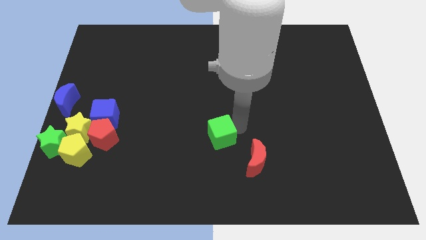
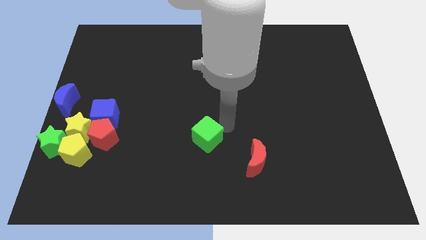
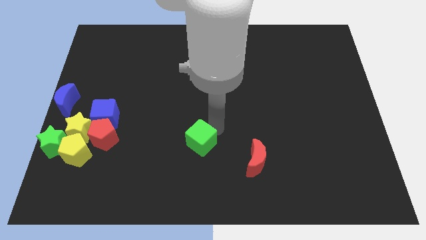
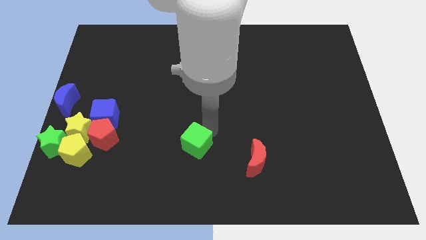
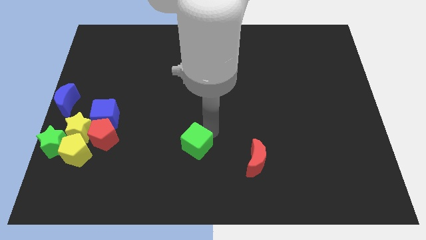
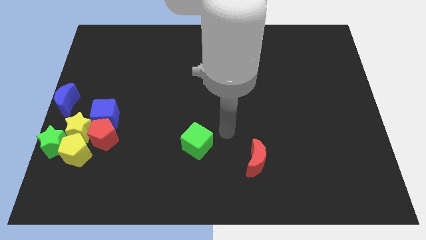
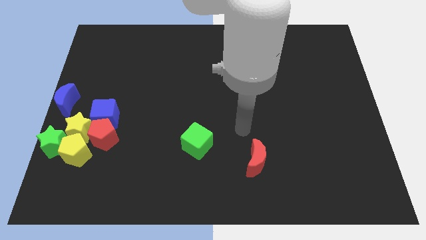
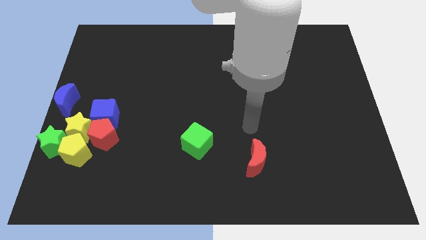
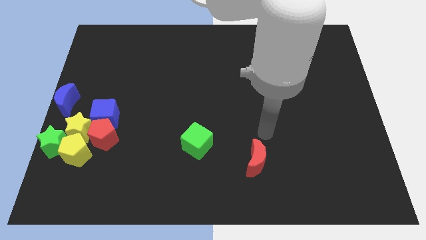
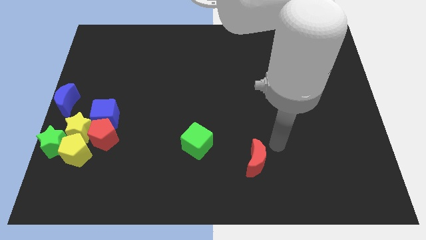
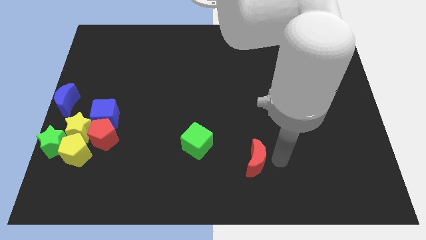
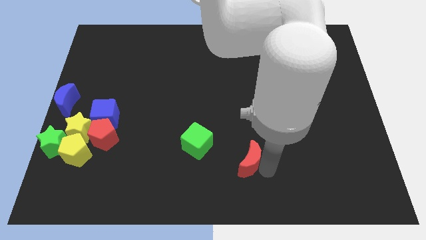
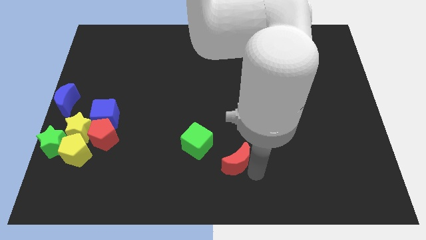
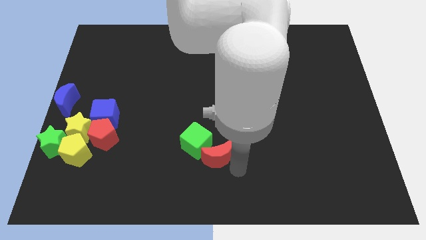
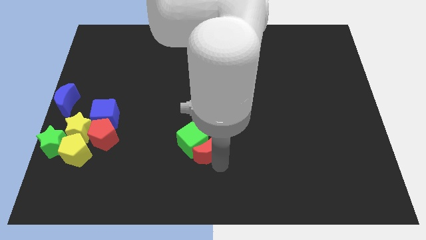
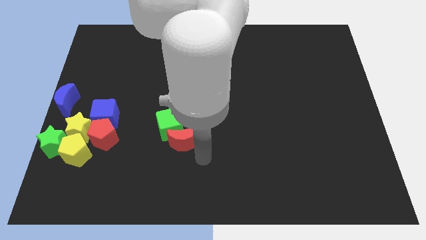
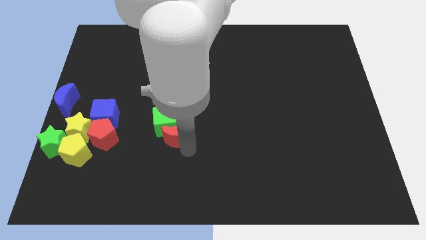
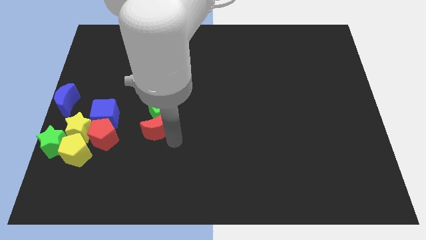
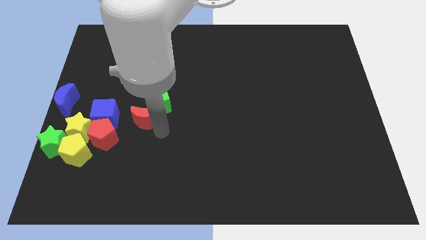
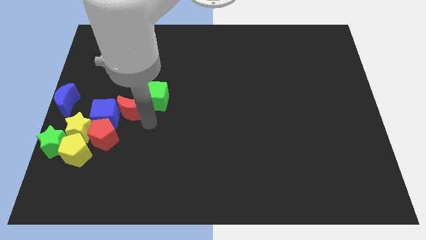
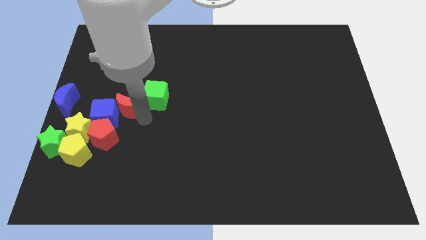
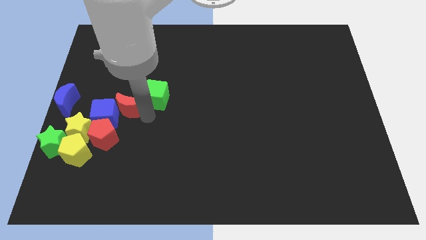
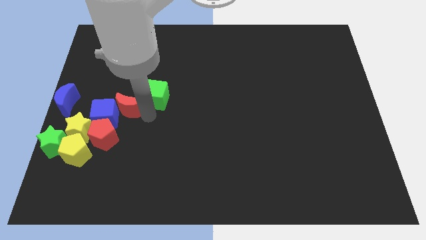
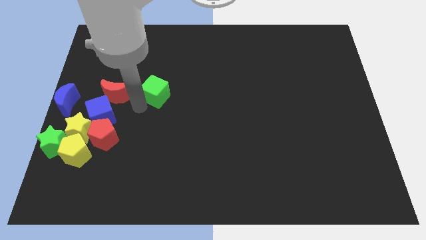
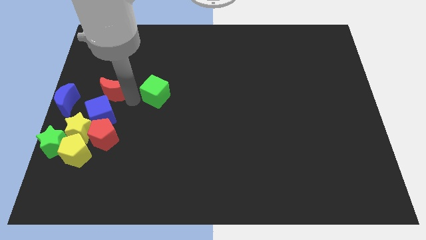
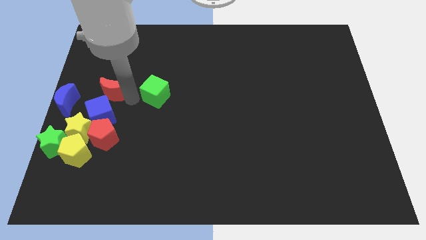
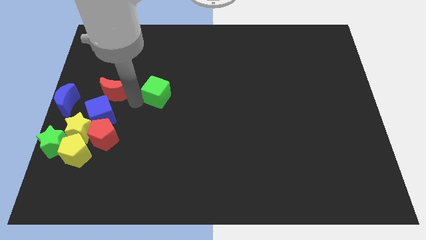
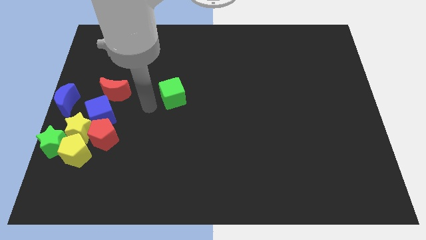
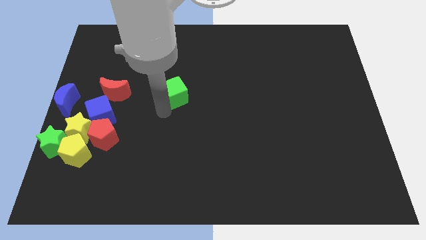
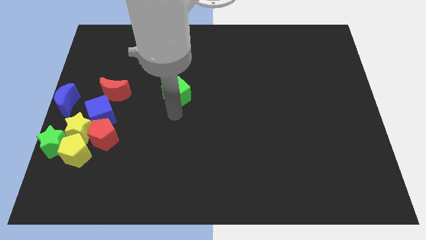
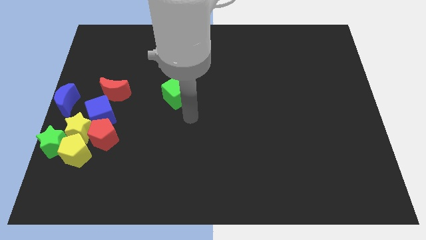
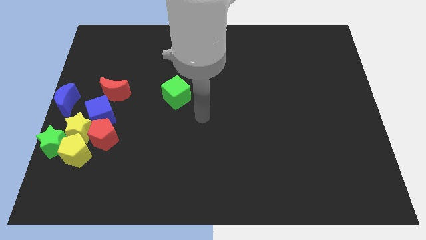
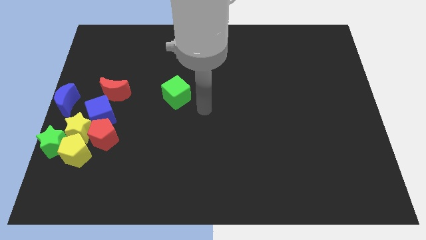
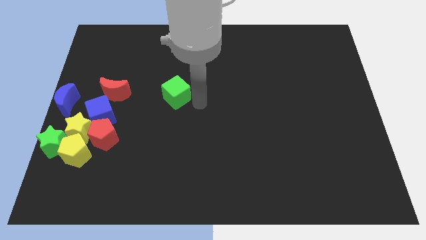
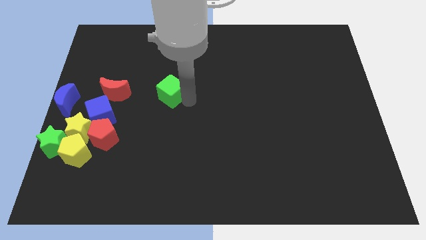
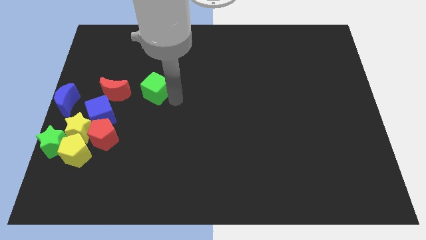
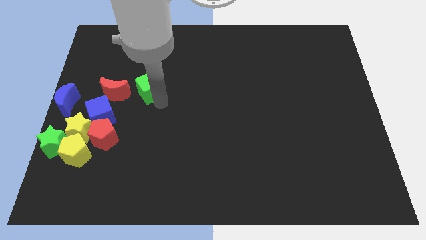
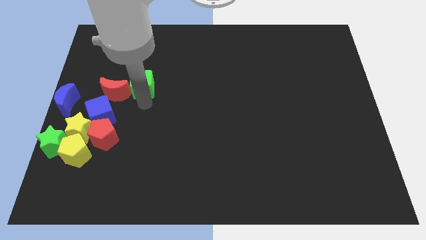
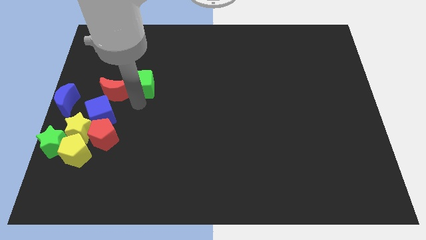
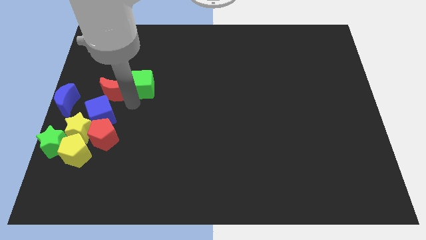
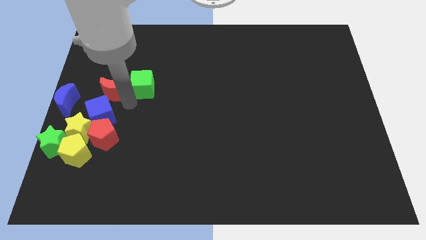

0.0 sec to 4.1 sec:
push red moon green cube into the group of blocks

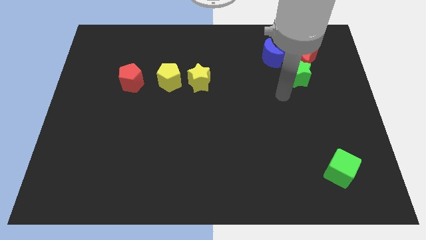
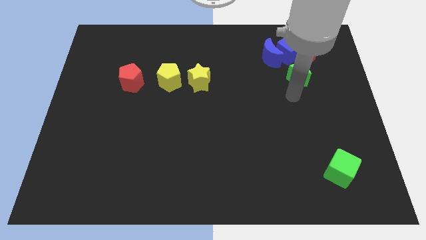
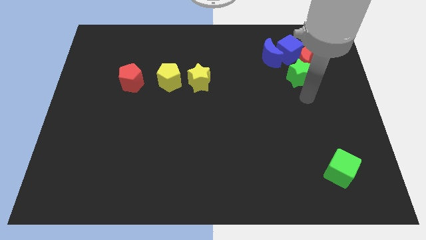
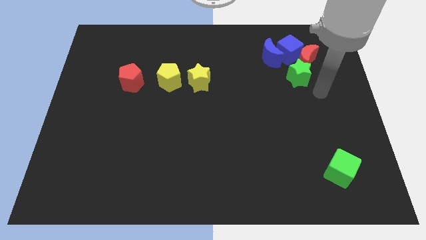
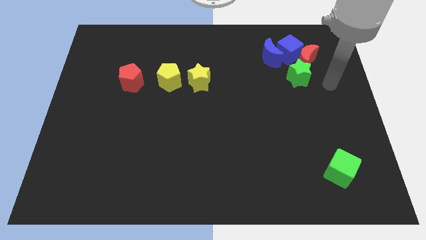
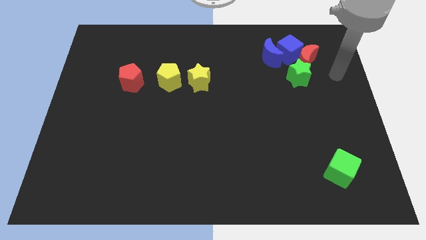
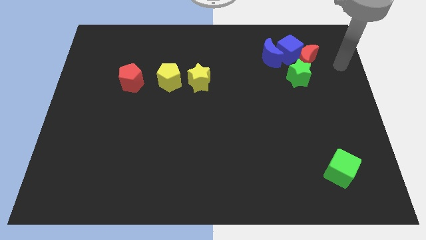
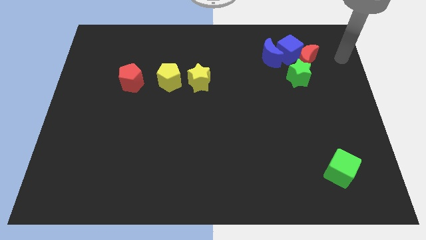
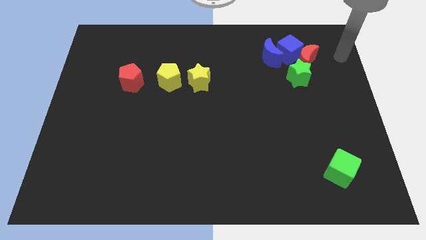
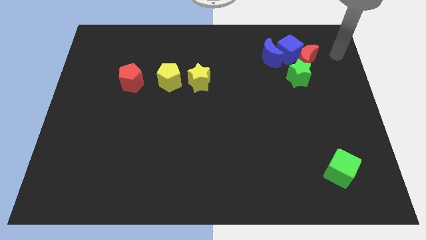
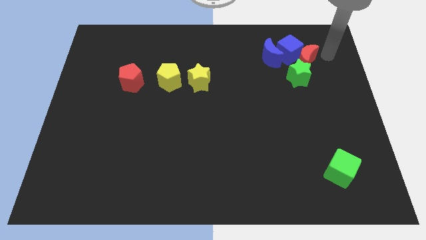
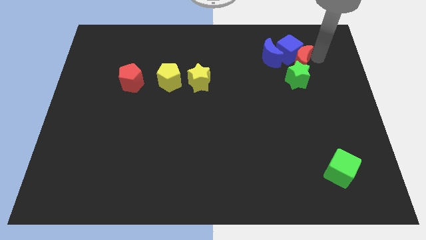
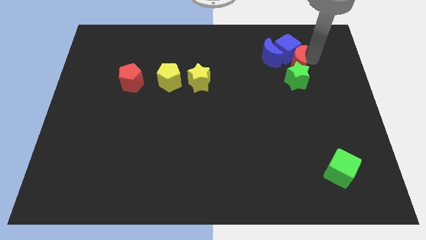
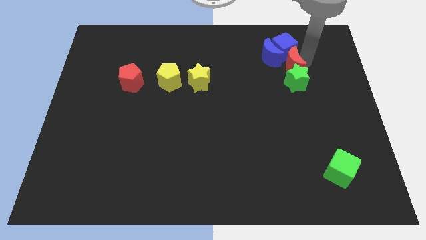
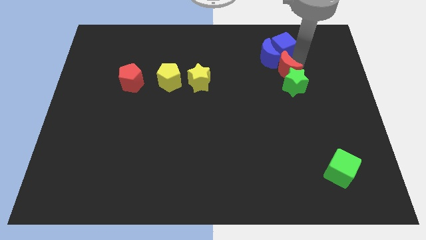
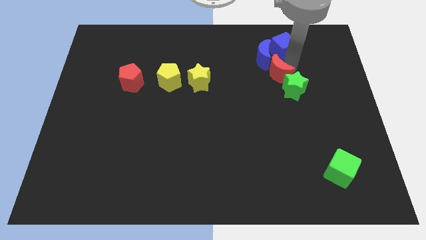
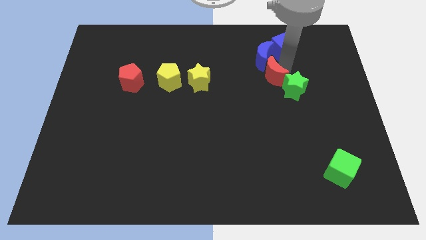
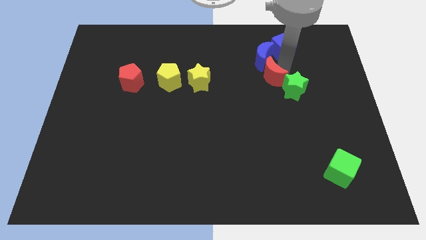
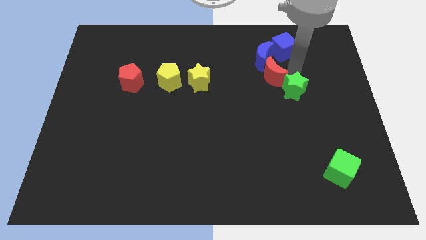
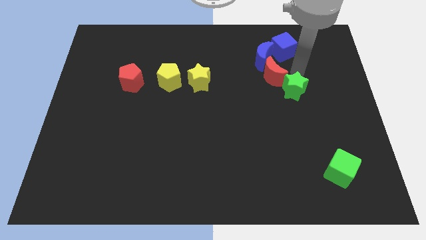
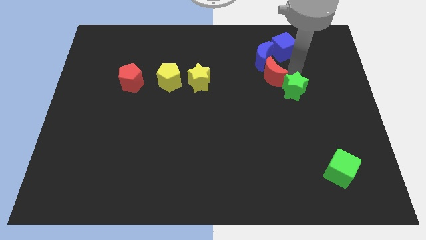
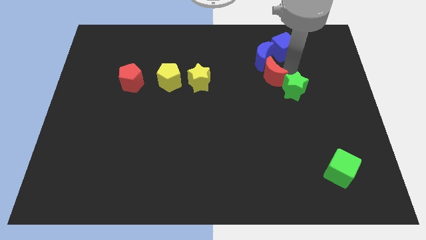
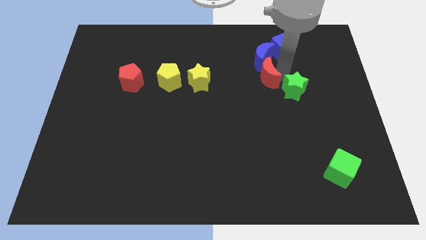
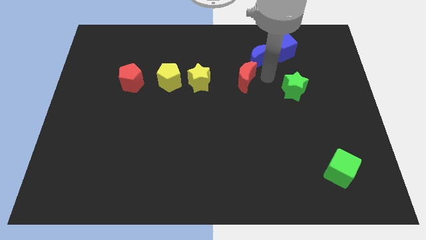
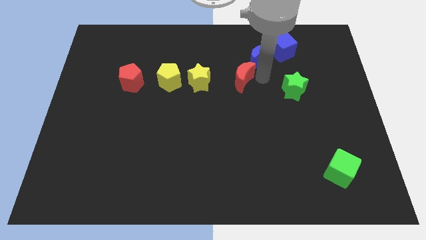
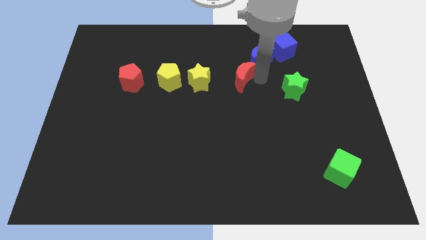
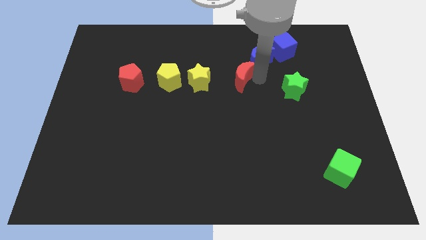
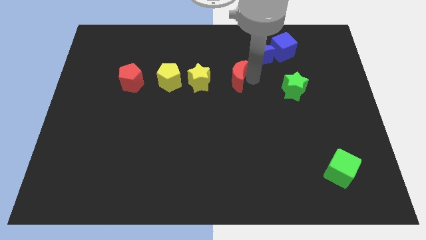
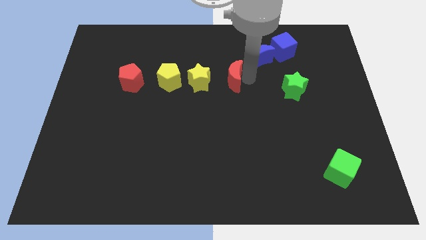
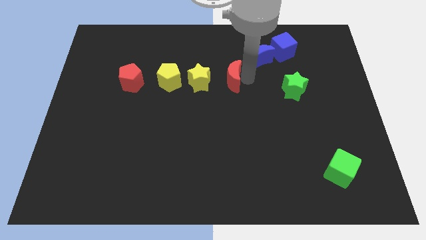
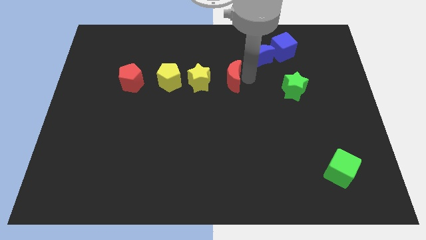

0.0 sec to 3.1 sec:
move the red crescent to the right of the yellow star

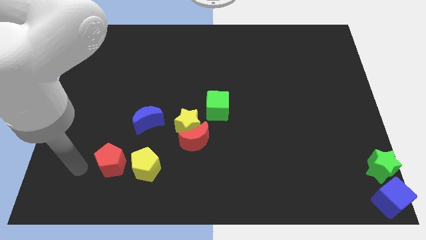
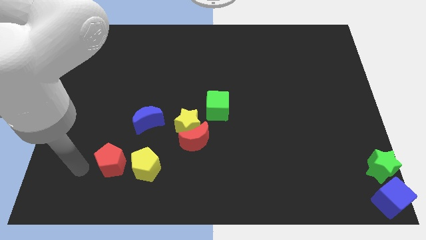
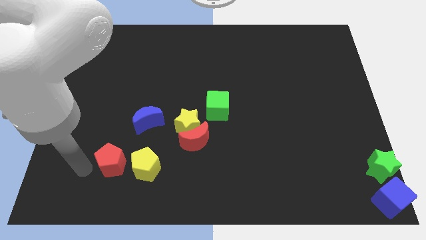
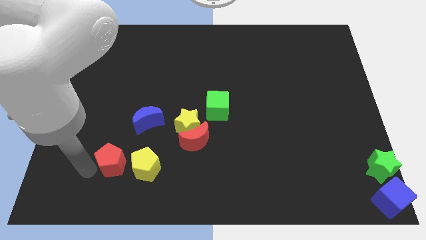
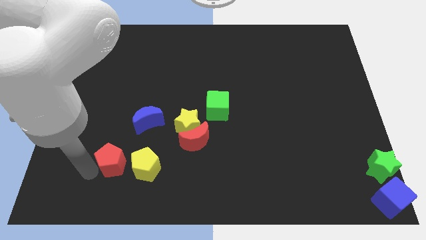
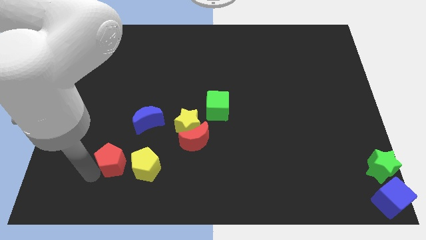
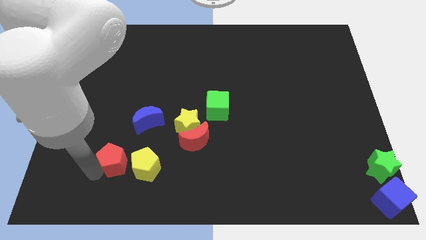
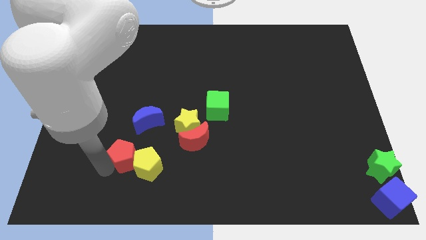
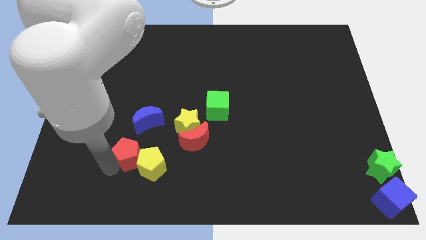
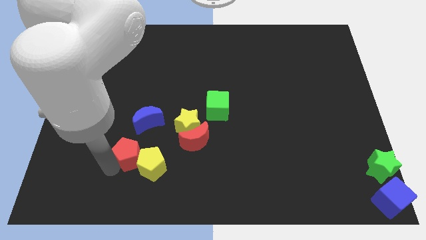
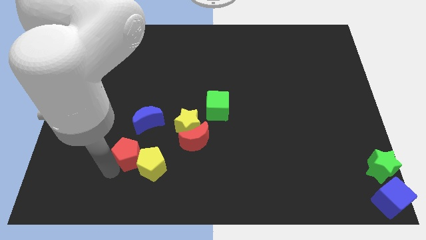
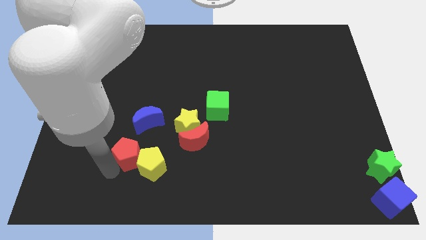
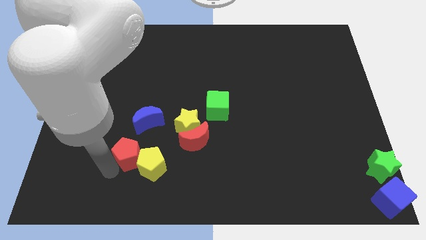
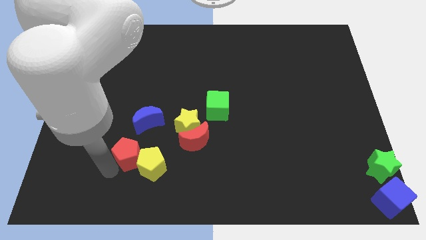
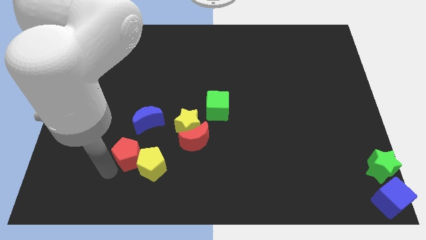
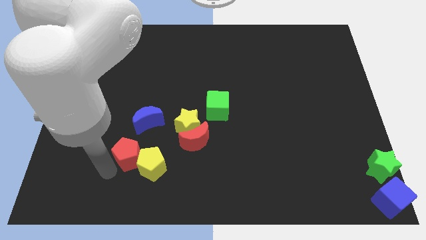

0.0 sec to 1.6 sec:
push red pentagon into yellow pentagon

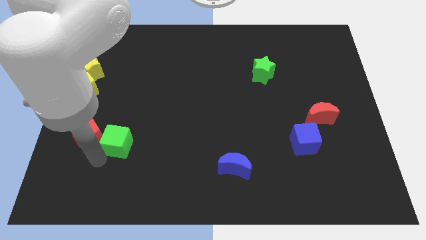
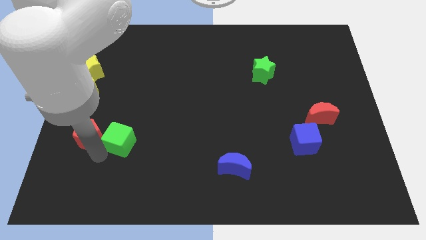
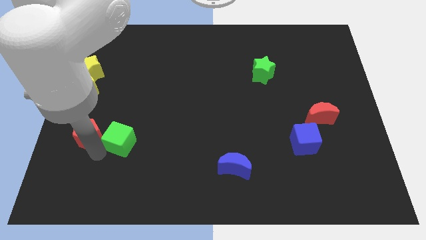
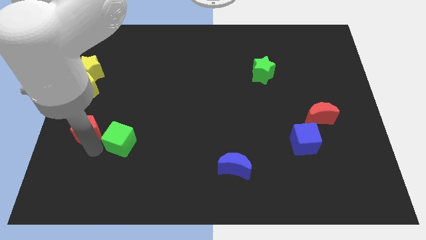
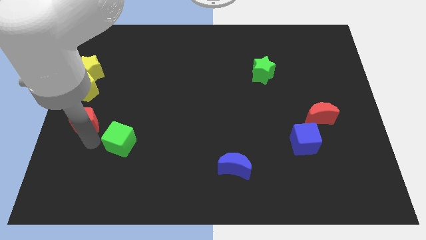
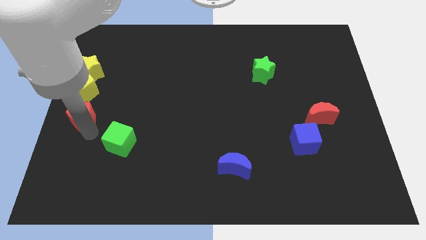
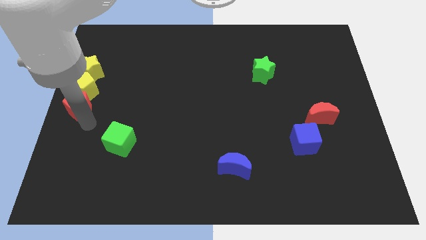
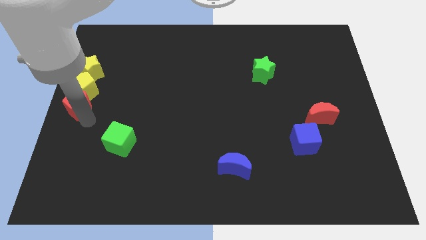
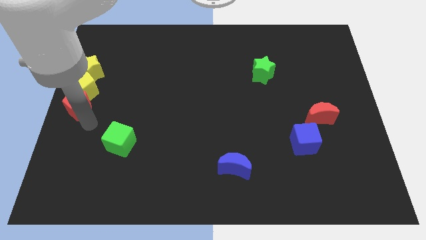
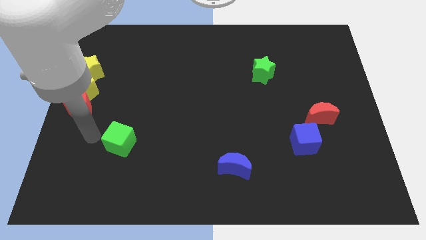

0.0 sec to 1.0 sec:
push the red pentagon into the yellow pentagon
